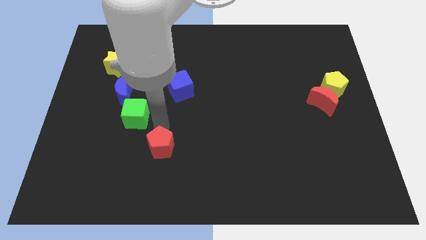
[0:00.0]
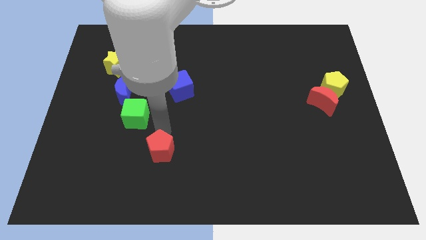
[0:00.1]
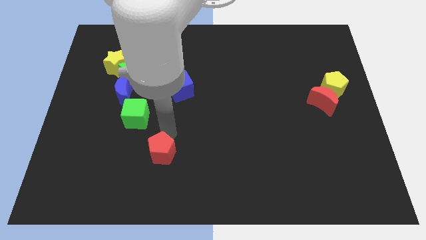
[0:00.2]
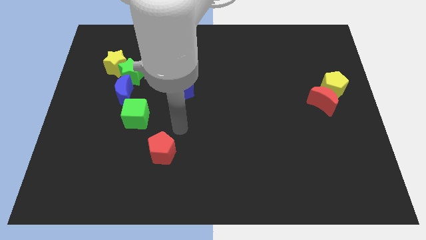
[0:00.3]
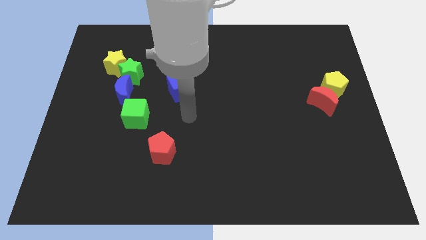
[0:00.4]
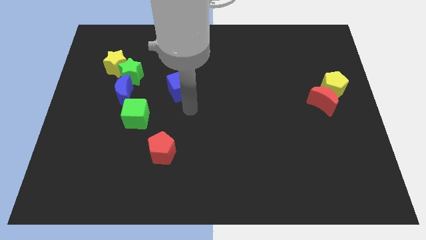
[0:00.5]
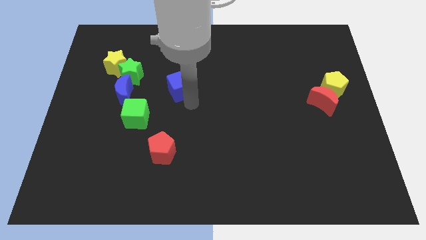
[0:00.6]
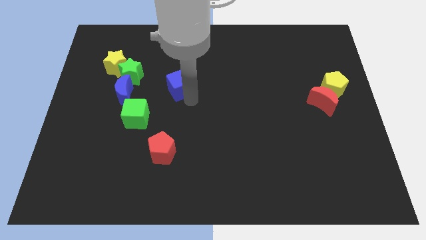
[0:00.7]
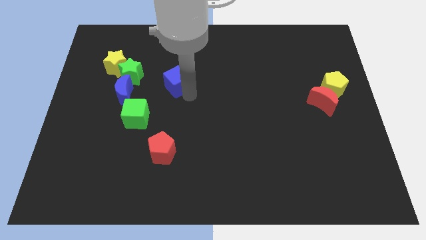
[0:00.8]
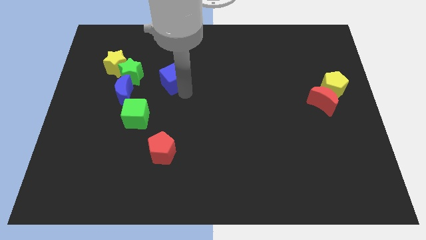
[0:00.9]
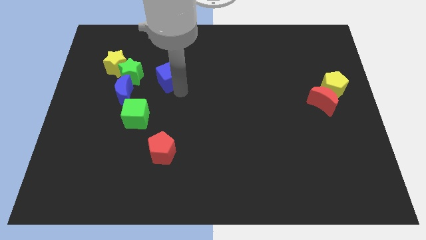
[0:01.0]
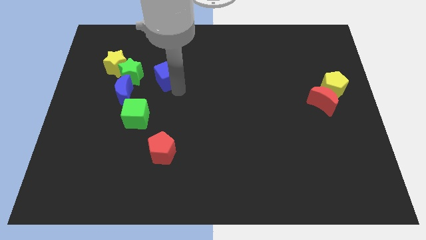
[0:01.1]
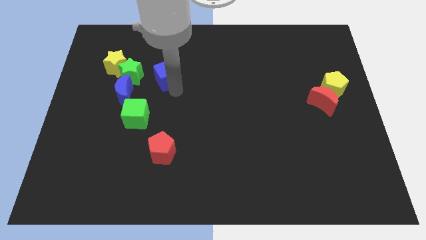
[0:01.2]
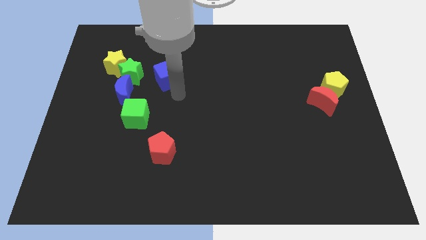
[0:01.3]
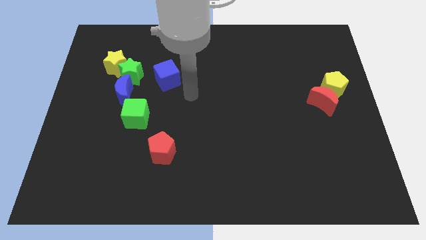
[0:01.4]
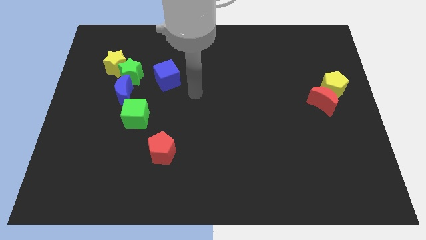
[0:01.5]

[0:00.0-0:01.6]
place the blue cube vertically on top of the red pentagon

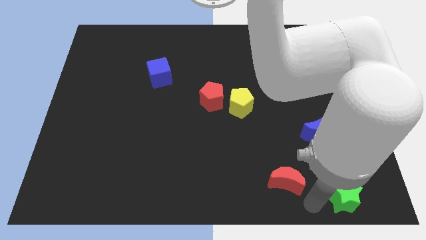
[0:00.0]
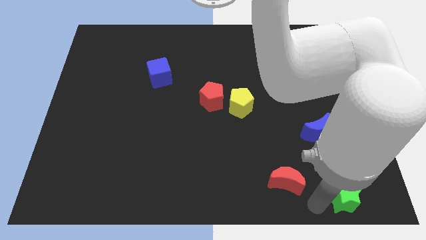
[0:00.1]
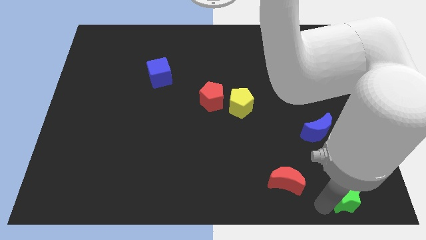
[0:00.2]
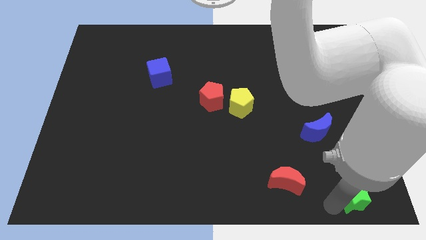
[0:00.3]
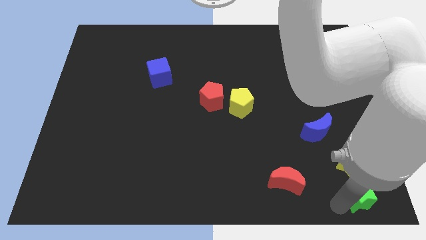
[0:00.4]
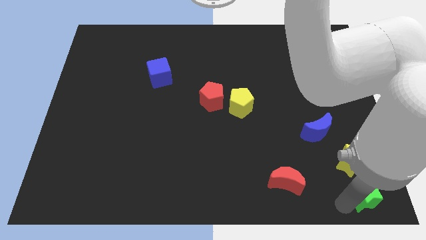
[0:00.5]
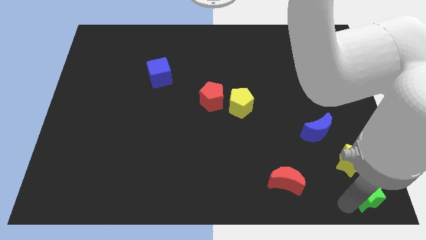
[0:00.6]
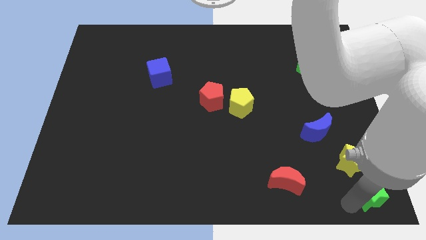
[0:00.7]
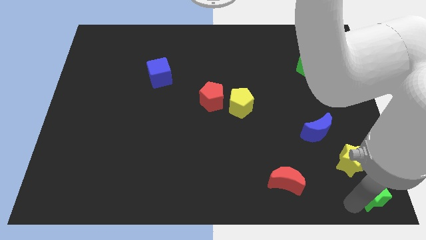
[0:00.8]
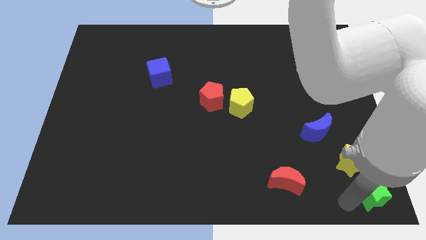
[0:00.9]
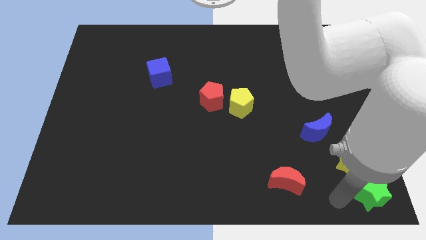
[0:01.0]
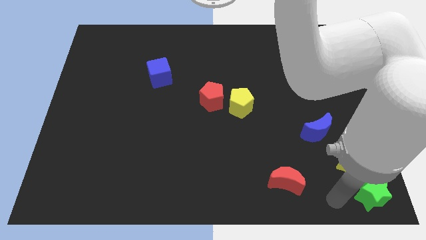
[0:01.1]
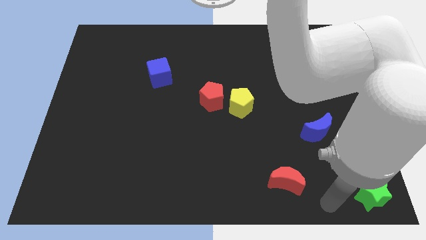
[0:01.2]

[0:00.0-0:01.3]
move green star to the bottom right corner

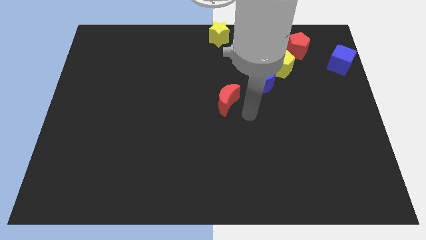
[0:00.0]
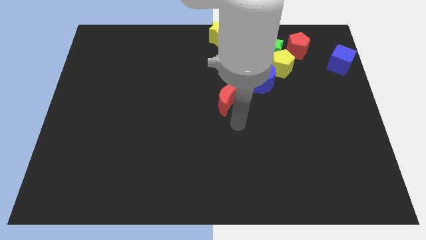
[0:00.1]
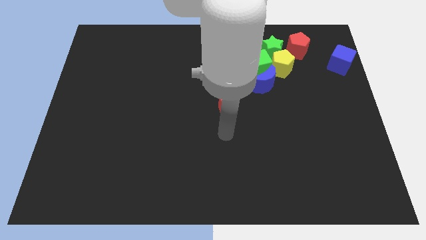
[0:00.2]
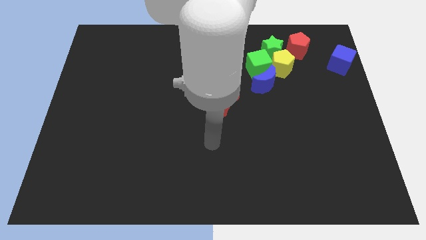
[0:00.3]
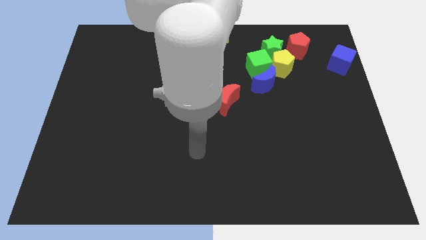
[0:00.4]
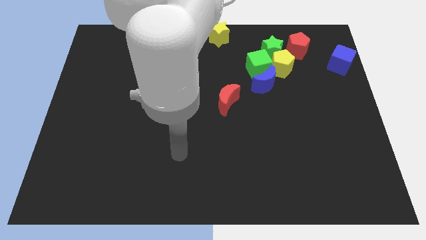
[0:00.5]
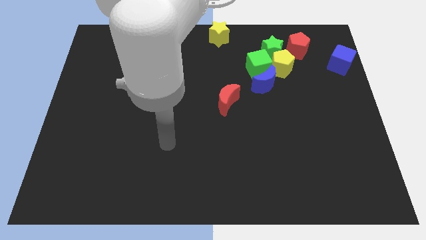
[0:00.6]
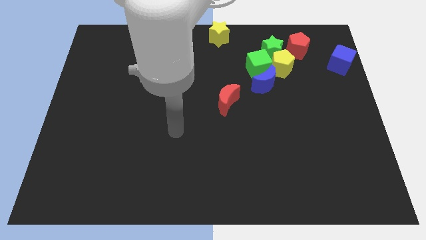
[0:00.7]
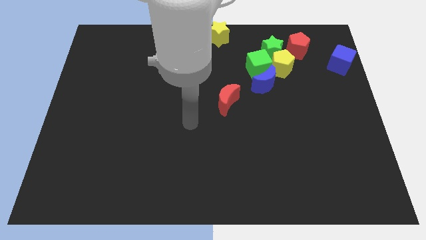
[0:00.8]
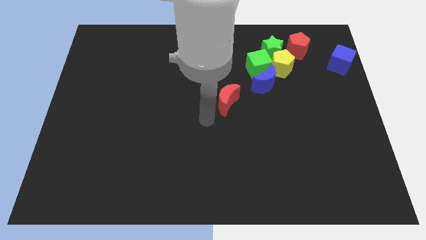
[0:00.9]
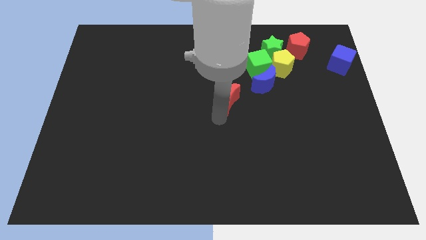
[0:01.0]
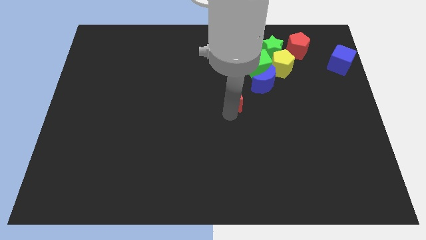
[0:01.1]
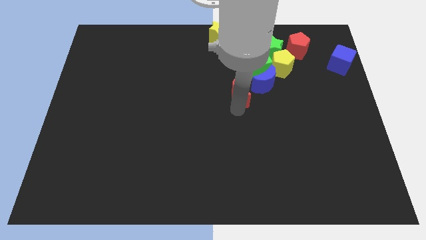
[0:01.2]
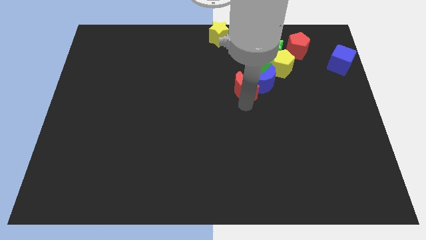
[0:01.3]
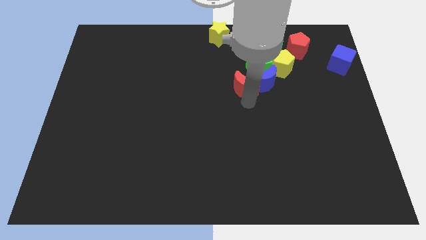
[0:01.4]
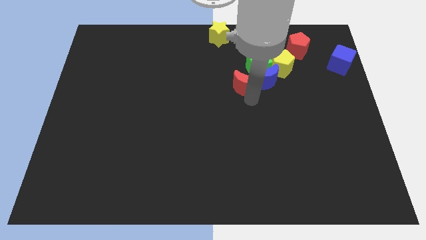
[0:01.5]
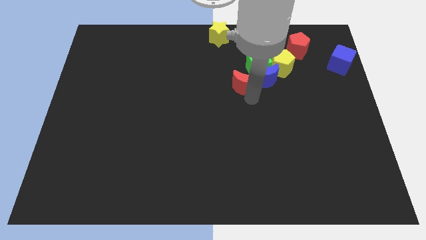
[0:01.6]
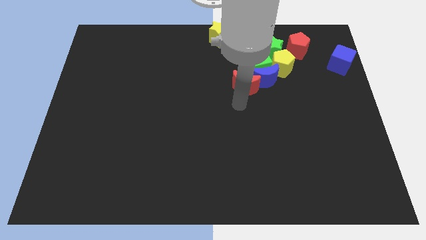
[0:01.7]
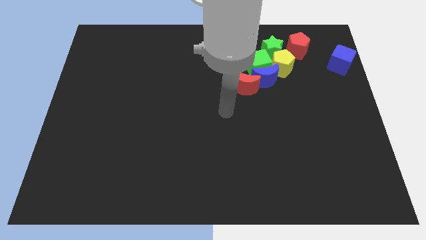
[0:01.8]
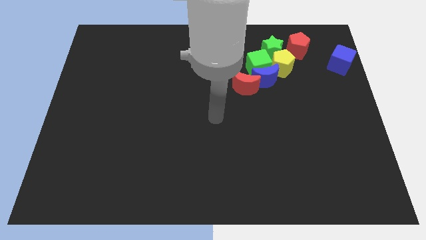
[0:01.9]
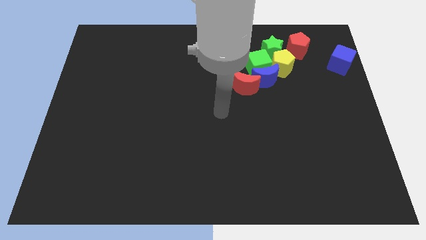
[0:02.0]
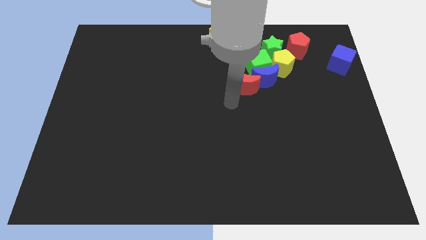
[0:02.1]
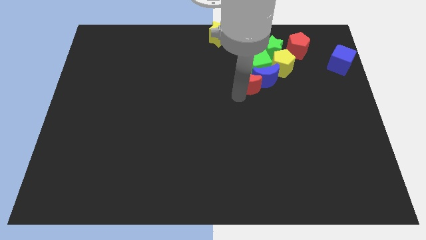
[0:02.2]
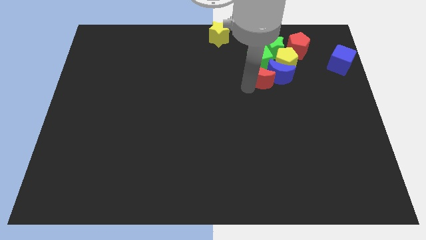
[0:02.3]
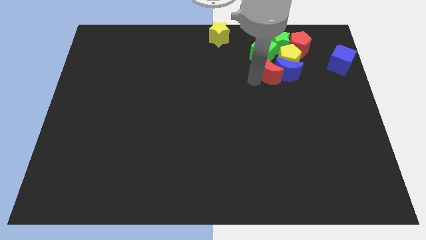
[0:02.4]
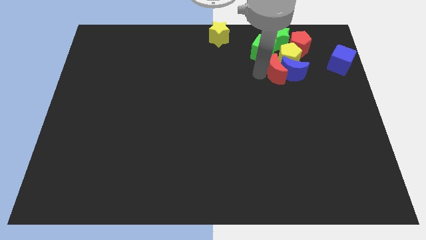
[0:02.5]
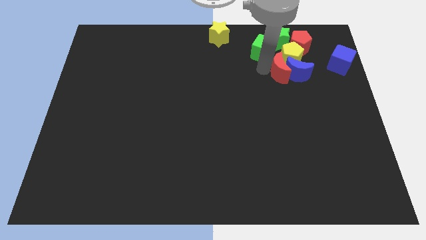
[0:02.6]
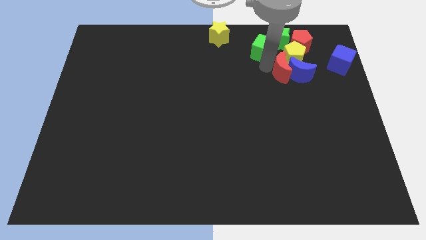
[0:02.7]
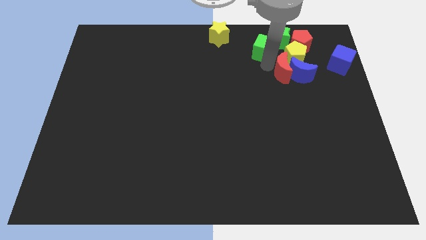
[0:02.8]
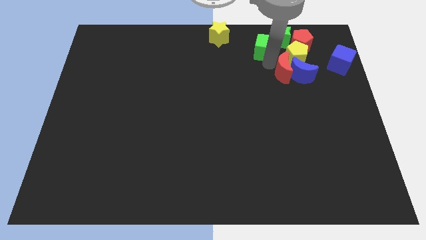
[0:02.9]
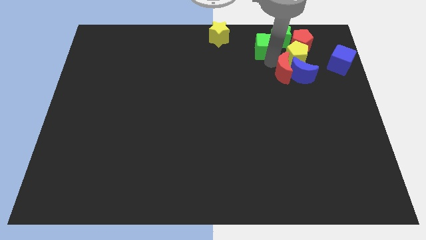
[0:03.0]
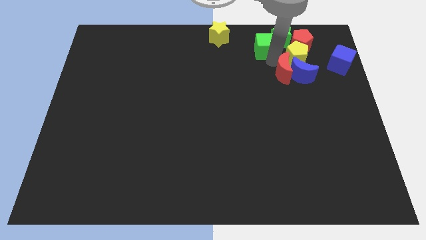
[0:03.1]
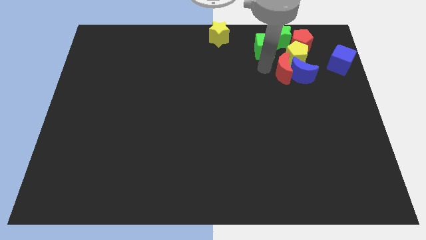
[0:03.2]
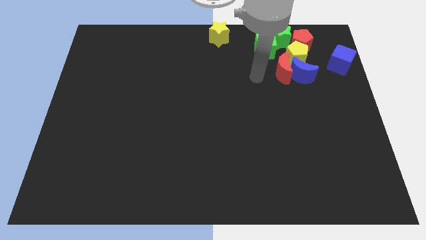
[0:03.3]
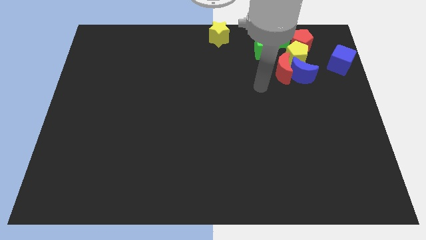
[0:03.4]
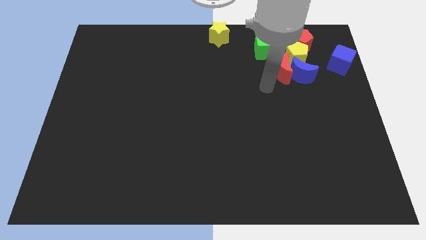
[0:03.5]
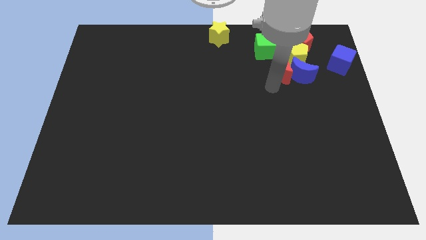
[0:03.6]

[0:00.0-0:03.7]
push red moon into the group of blocks

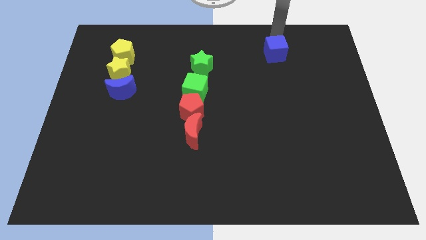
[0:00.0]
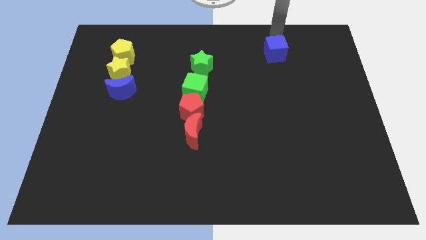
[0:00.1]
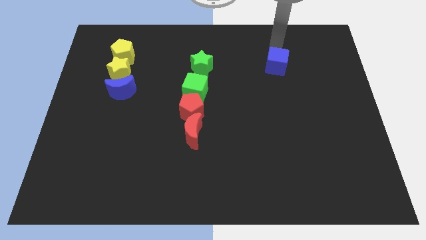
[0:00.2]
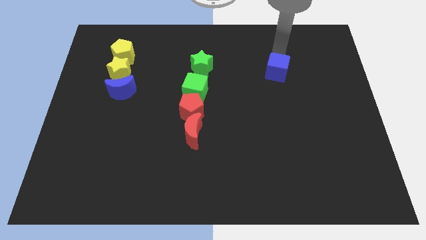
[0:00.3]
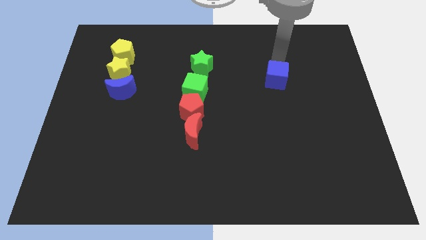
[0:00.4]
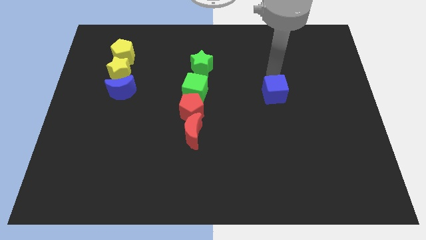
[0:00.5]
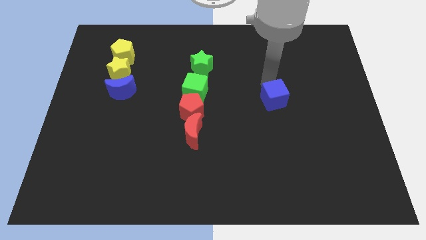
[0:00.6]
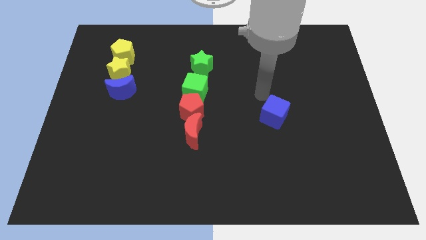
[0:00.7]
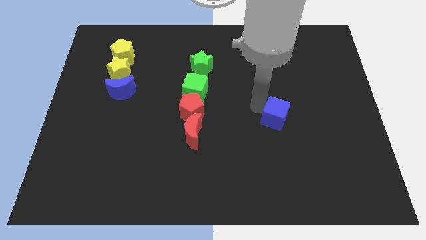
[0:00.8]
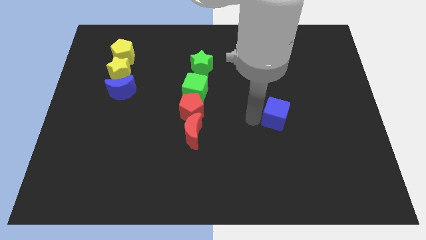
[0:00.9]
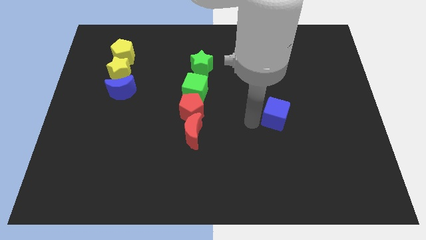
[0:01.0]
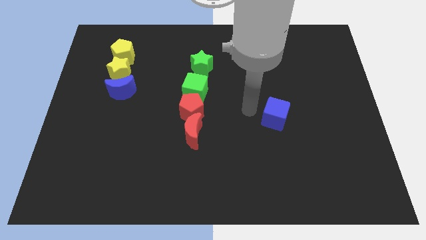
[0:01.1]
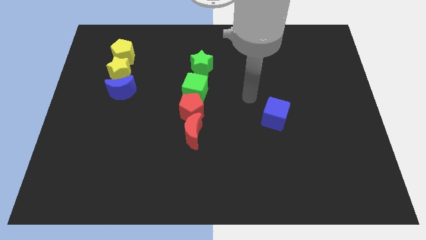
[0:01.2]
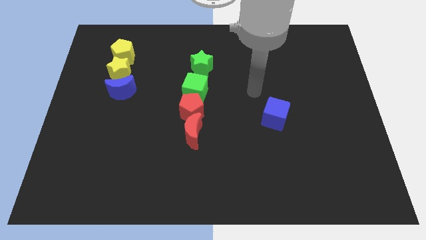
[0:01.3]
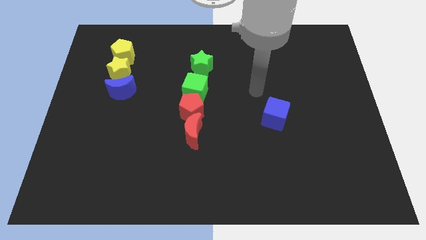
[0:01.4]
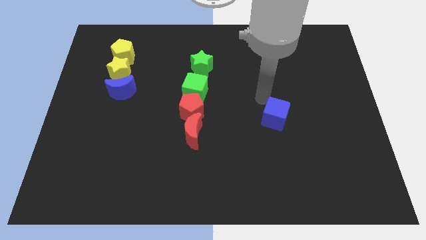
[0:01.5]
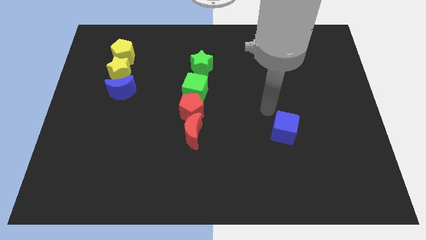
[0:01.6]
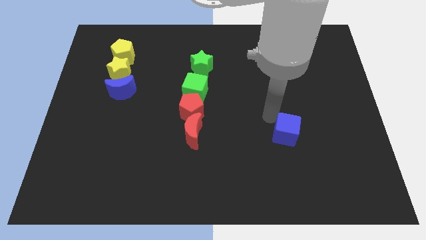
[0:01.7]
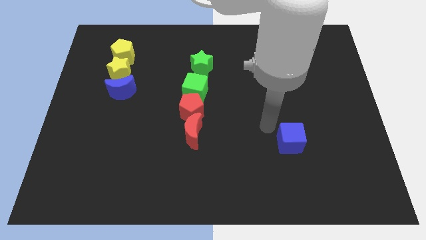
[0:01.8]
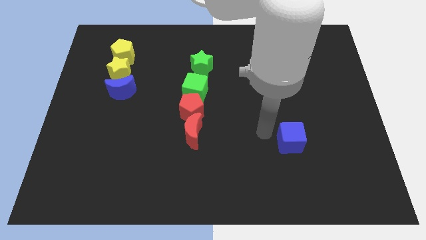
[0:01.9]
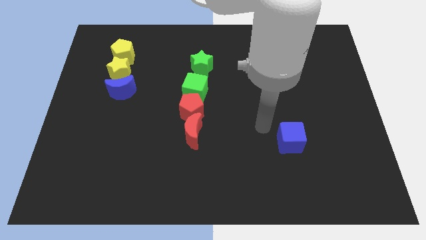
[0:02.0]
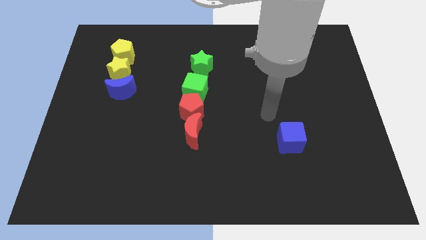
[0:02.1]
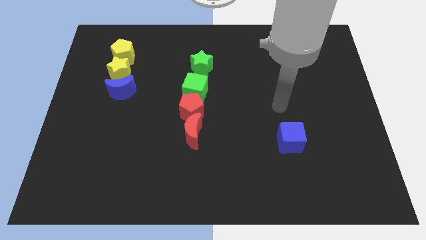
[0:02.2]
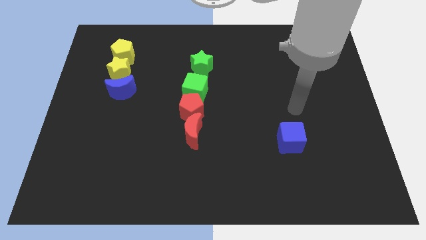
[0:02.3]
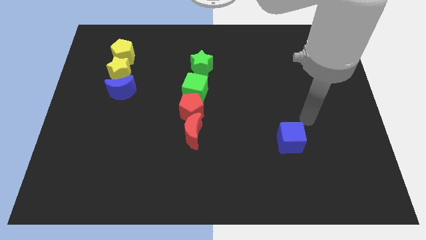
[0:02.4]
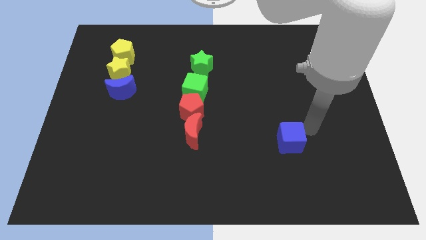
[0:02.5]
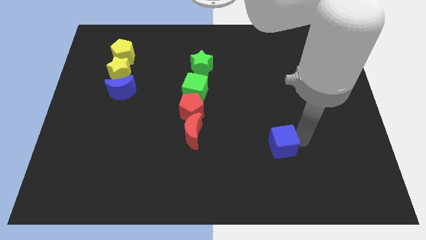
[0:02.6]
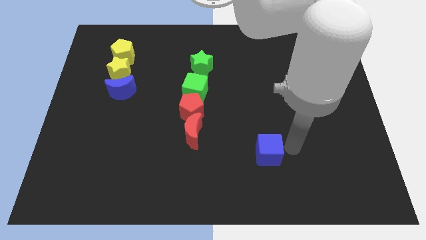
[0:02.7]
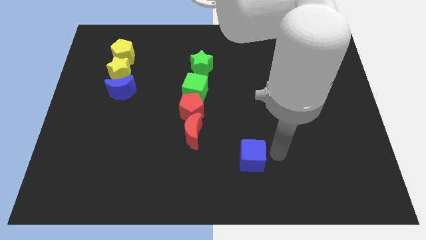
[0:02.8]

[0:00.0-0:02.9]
move the blue cube slightly downwards
